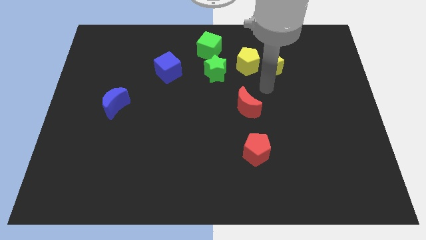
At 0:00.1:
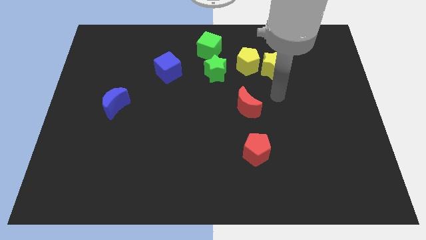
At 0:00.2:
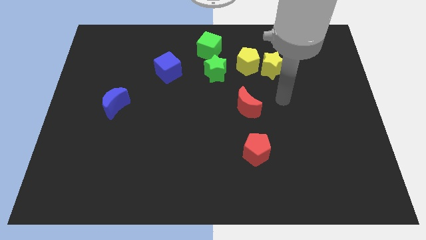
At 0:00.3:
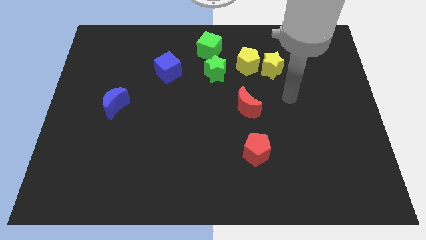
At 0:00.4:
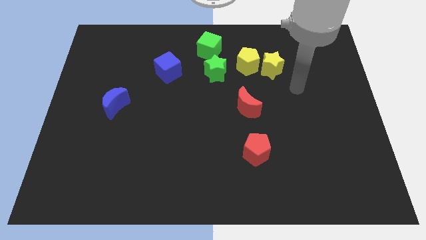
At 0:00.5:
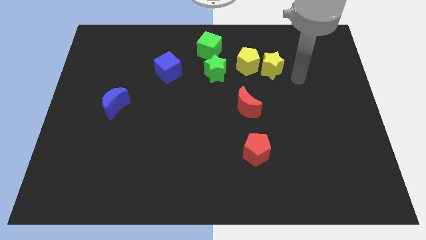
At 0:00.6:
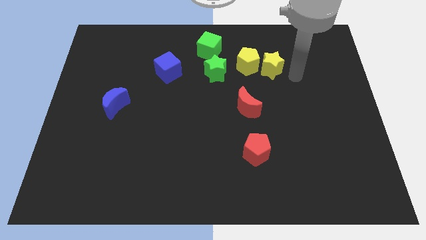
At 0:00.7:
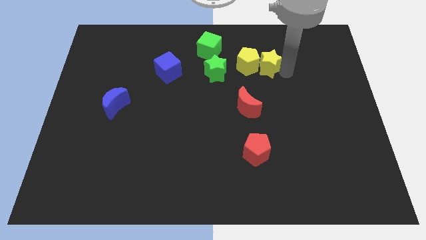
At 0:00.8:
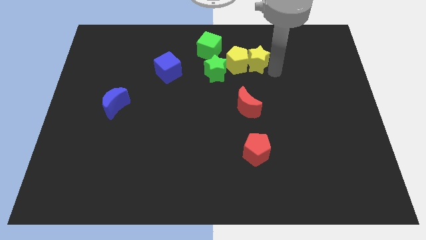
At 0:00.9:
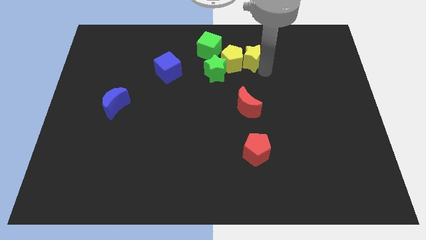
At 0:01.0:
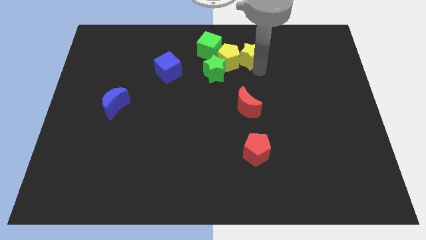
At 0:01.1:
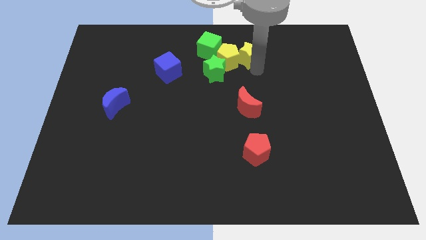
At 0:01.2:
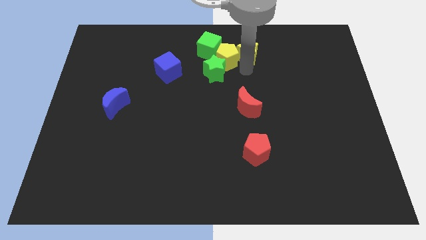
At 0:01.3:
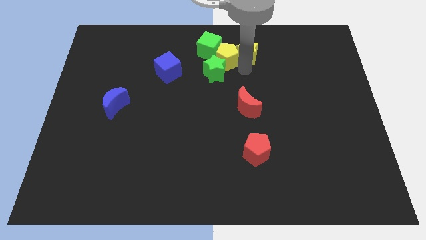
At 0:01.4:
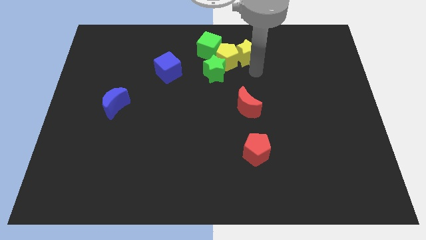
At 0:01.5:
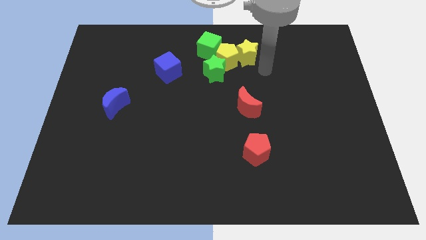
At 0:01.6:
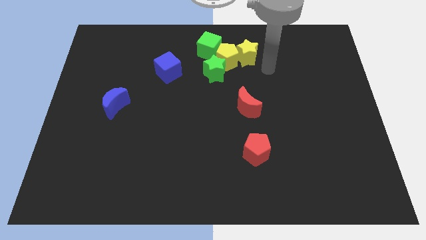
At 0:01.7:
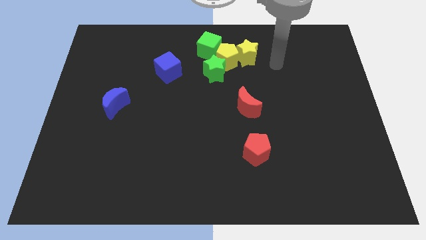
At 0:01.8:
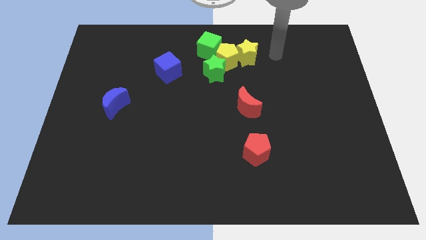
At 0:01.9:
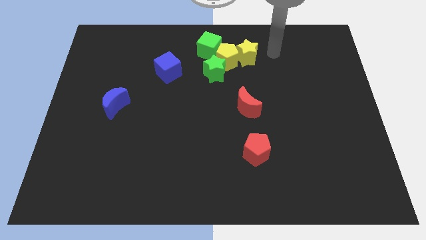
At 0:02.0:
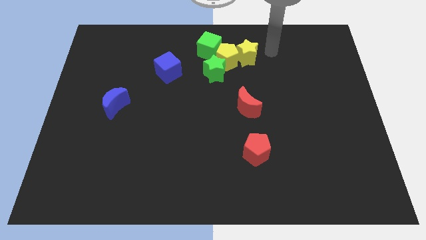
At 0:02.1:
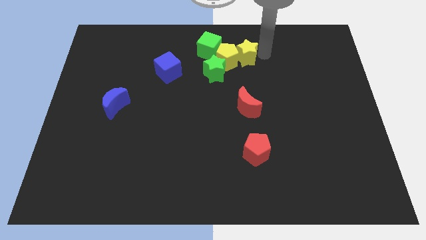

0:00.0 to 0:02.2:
push the yellow blocks into the green blocks

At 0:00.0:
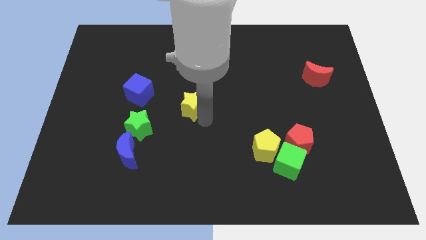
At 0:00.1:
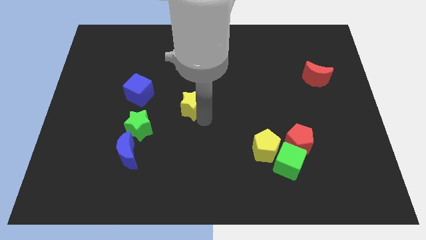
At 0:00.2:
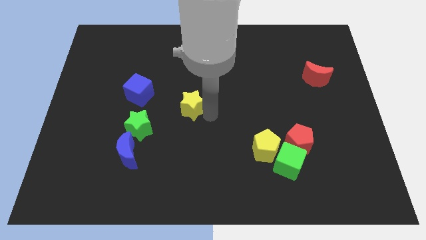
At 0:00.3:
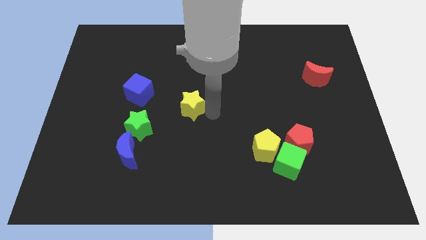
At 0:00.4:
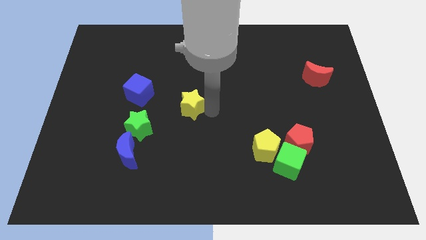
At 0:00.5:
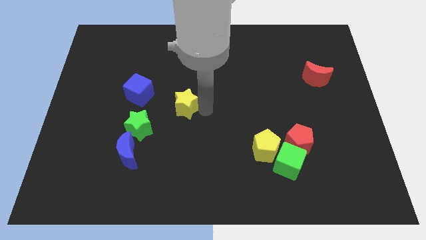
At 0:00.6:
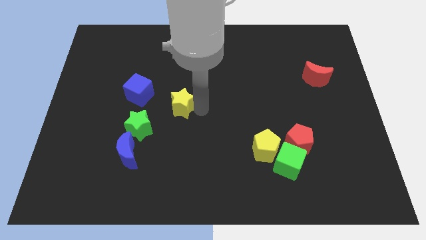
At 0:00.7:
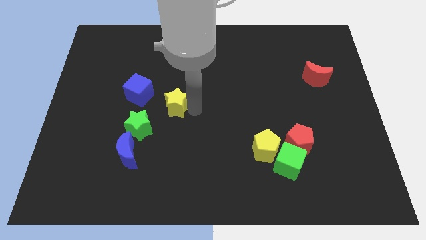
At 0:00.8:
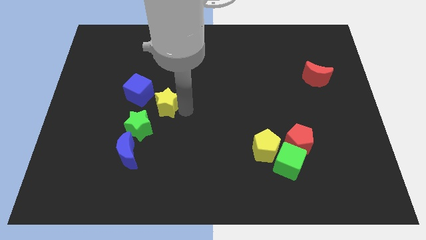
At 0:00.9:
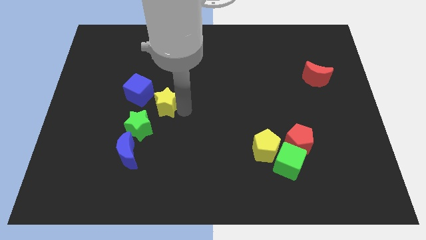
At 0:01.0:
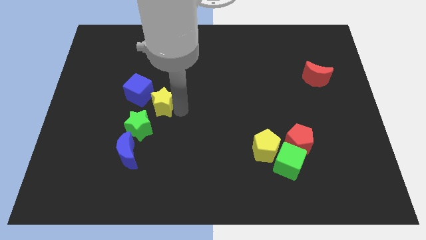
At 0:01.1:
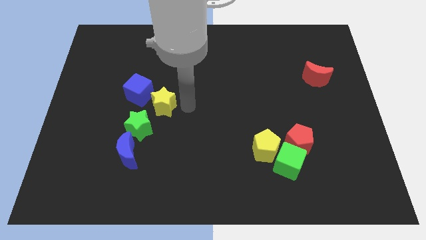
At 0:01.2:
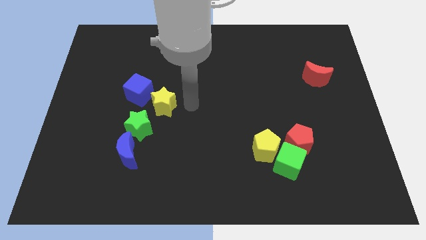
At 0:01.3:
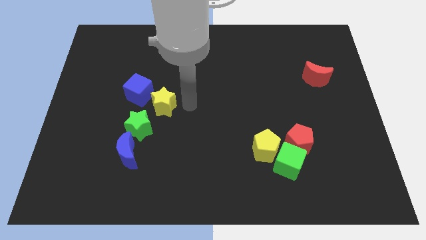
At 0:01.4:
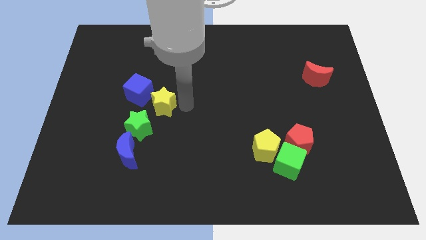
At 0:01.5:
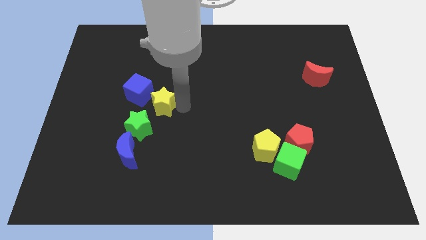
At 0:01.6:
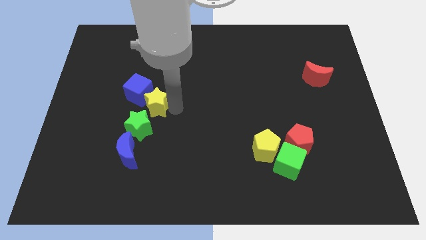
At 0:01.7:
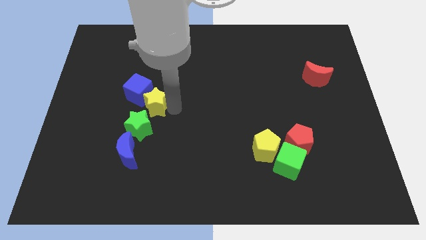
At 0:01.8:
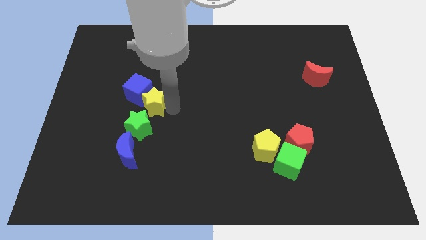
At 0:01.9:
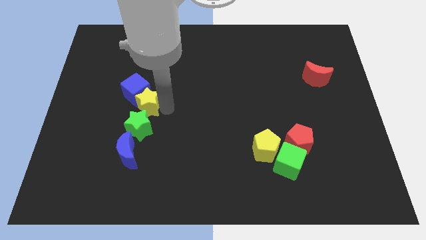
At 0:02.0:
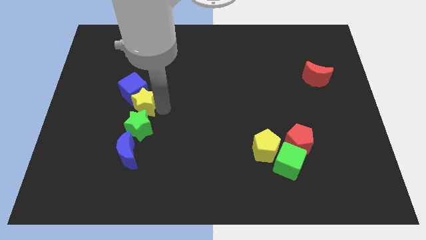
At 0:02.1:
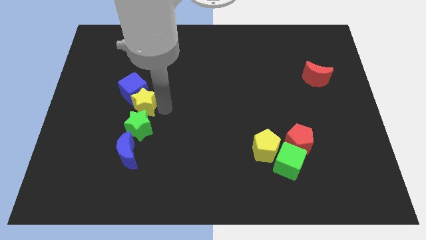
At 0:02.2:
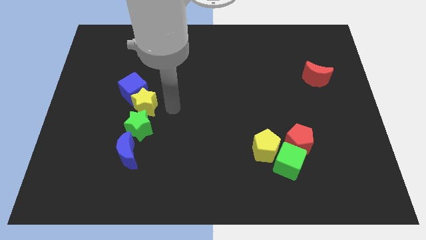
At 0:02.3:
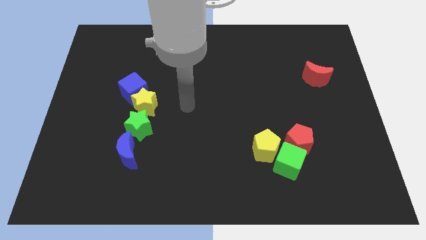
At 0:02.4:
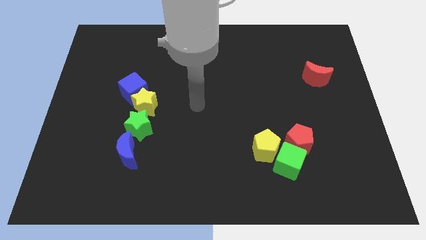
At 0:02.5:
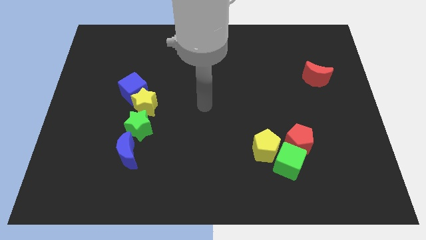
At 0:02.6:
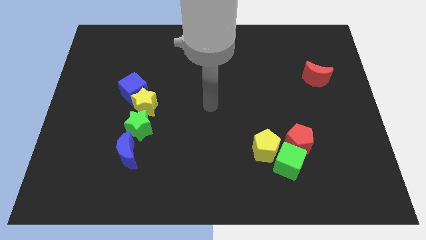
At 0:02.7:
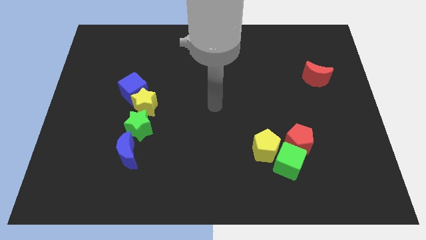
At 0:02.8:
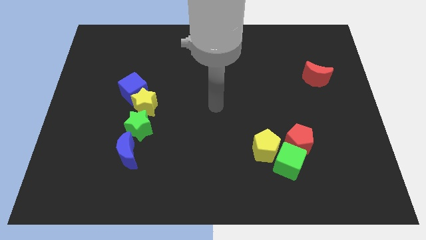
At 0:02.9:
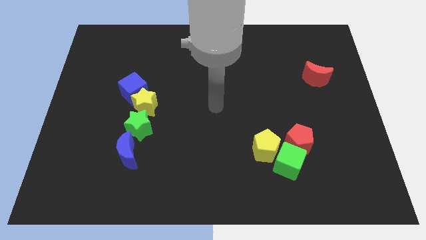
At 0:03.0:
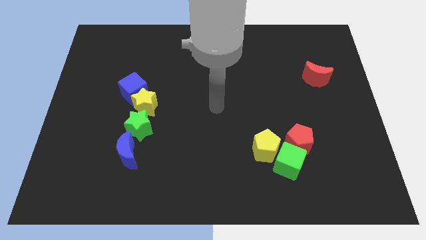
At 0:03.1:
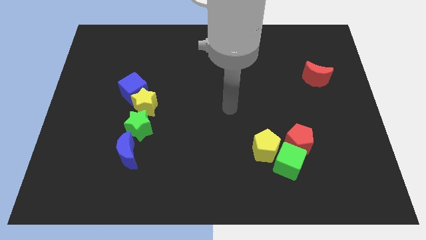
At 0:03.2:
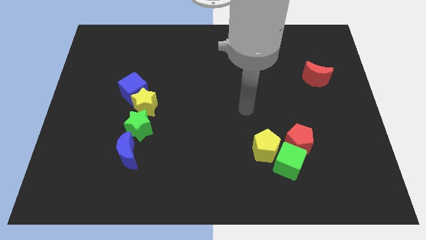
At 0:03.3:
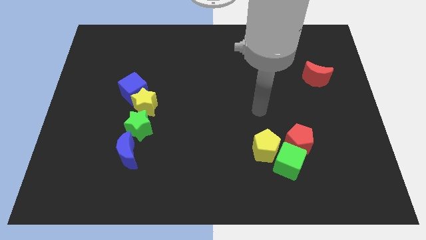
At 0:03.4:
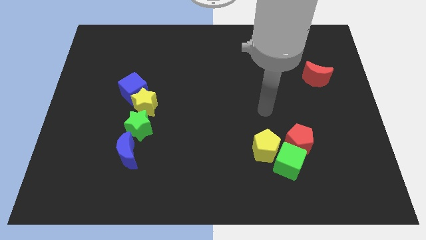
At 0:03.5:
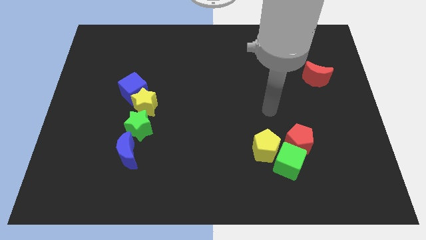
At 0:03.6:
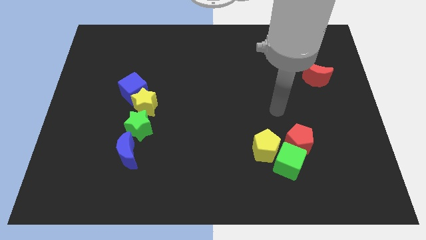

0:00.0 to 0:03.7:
push the yellow star into the blue cube

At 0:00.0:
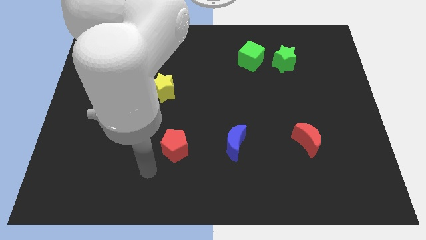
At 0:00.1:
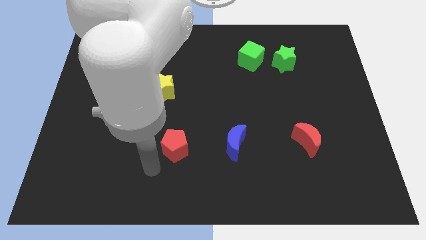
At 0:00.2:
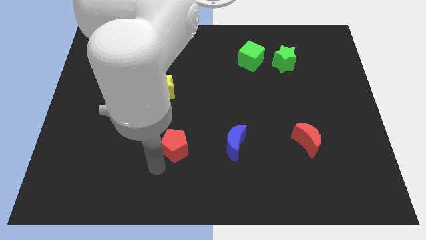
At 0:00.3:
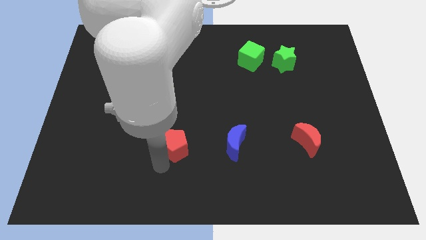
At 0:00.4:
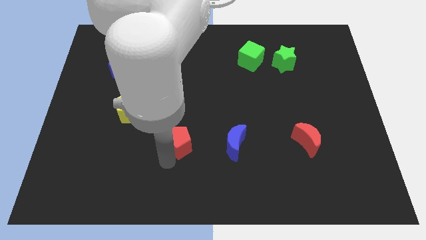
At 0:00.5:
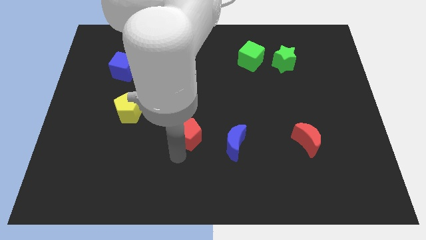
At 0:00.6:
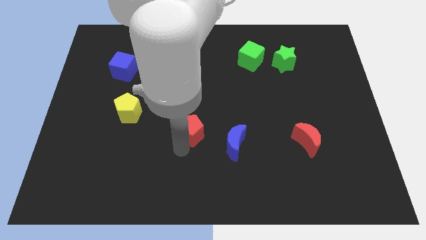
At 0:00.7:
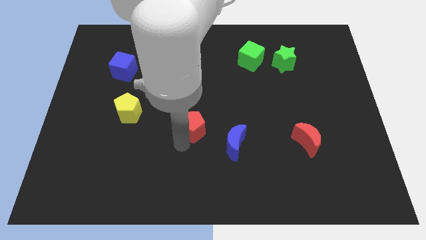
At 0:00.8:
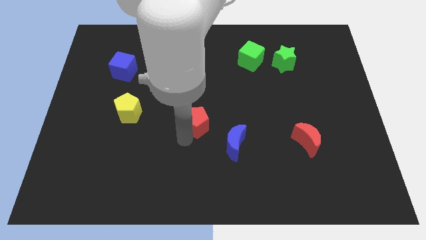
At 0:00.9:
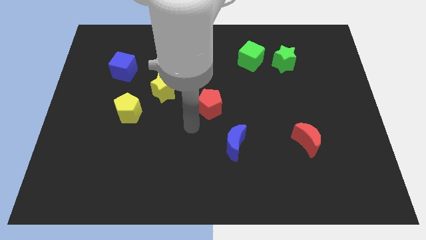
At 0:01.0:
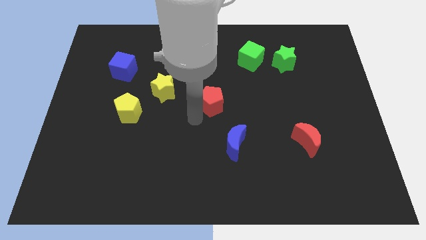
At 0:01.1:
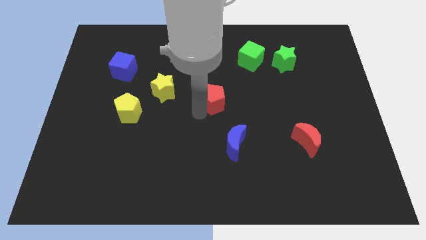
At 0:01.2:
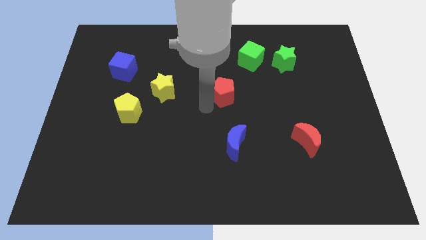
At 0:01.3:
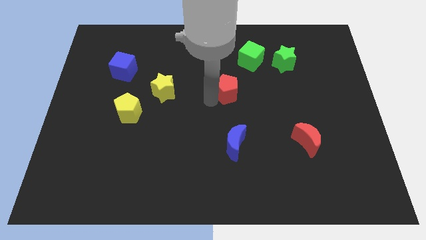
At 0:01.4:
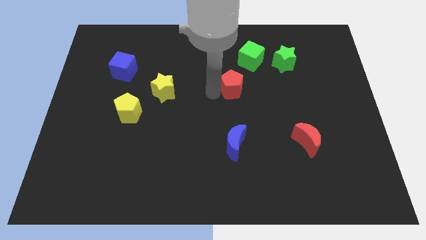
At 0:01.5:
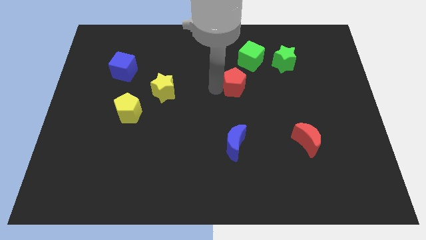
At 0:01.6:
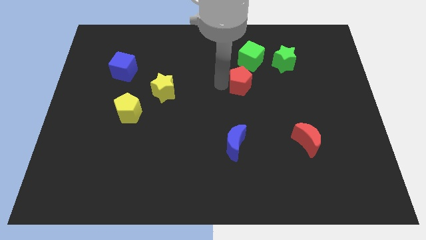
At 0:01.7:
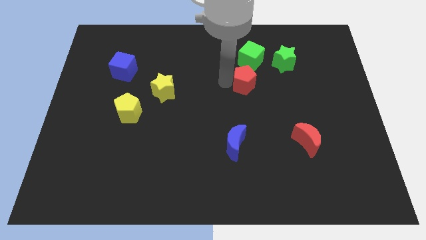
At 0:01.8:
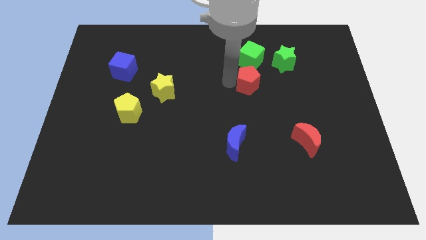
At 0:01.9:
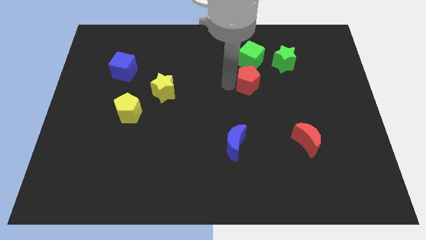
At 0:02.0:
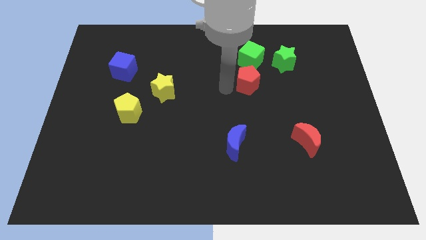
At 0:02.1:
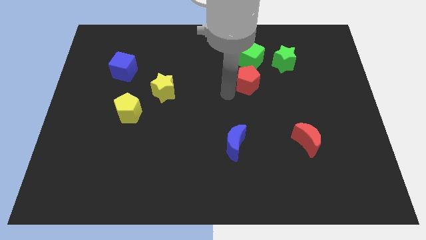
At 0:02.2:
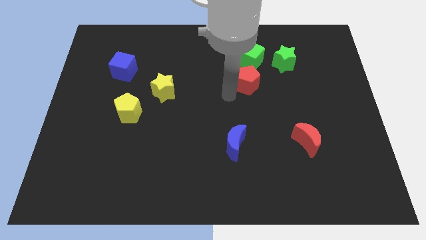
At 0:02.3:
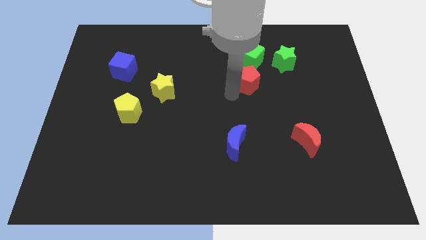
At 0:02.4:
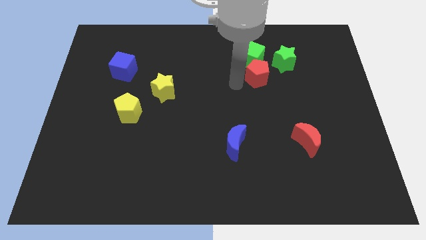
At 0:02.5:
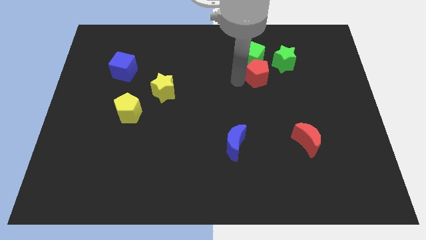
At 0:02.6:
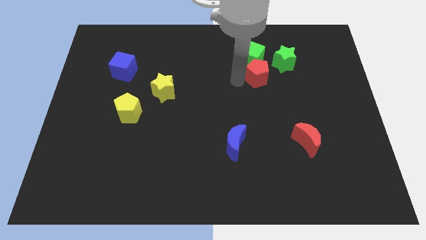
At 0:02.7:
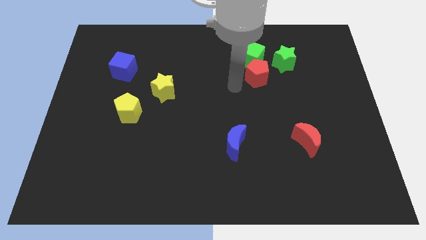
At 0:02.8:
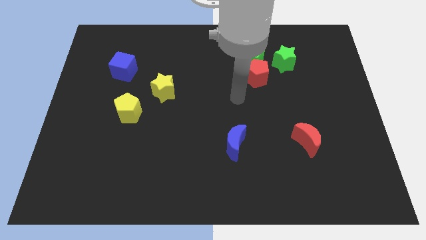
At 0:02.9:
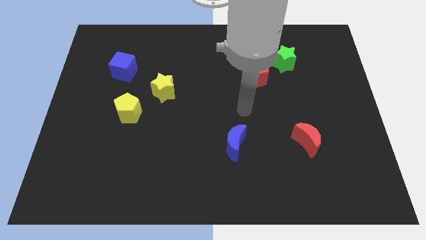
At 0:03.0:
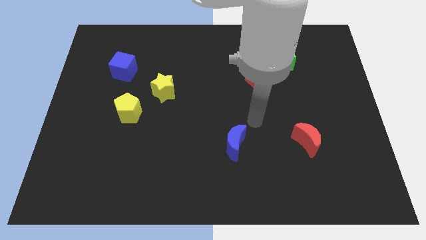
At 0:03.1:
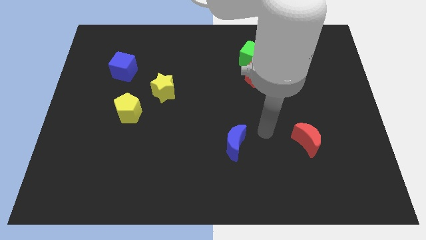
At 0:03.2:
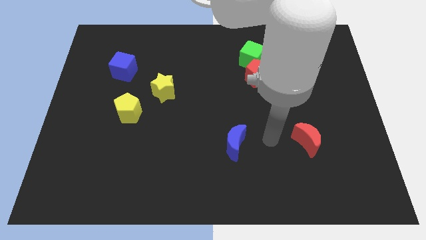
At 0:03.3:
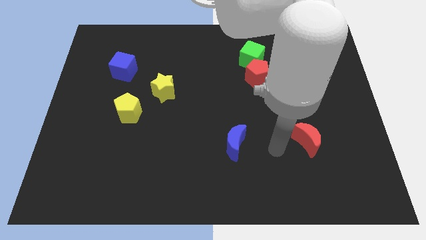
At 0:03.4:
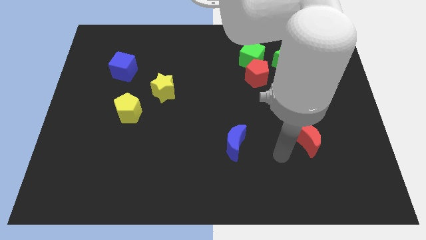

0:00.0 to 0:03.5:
move the red pentagon towards the green cube
